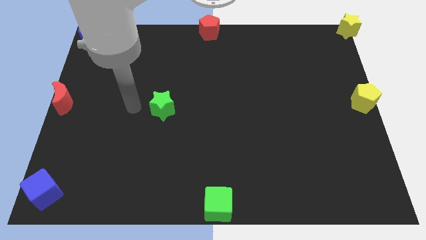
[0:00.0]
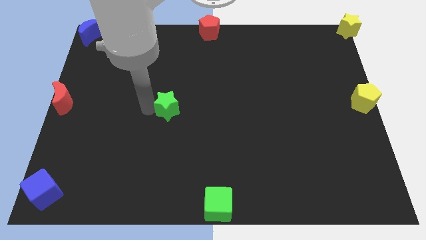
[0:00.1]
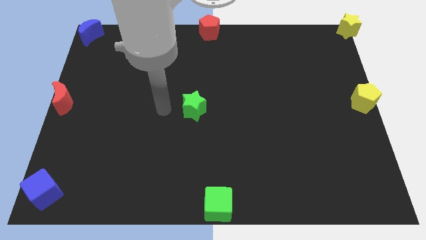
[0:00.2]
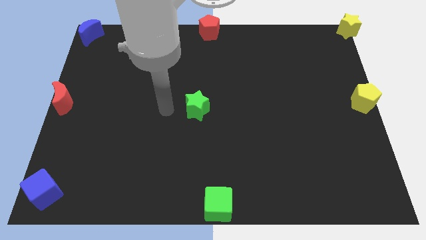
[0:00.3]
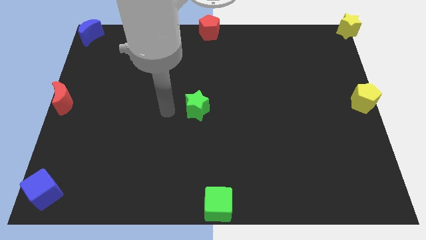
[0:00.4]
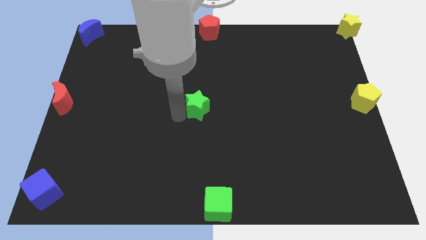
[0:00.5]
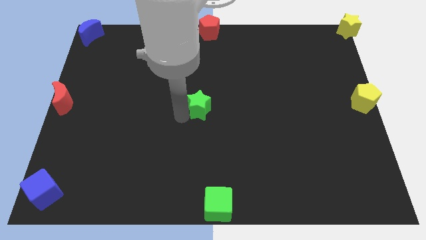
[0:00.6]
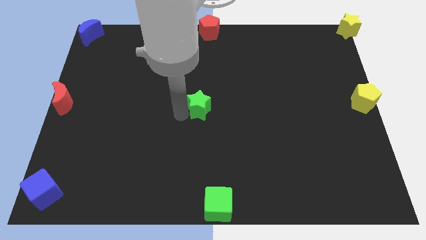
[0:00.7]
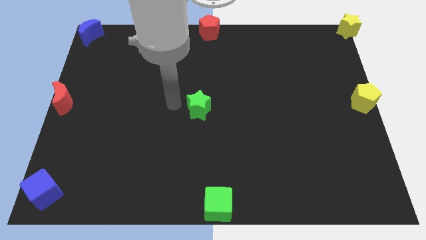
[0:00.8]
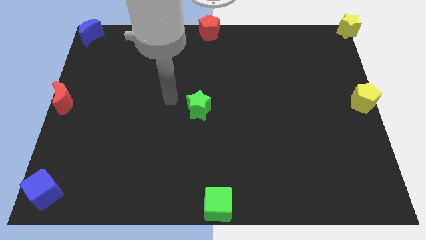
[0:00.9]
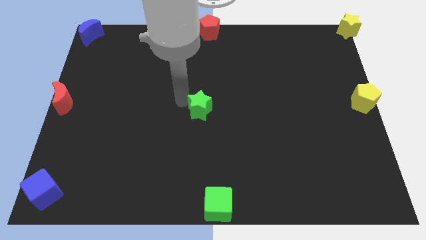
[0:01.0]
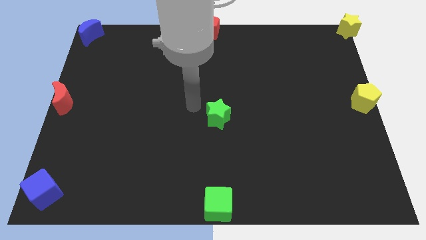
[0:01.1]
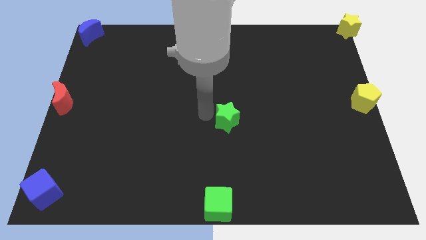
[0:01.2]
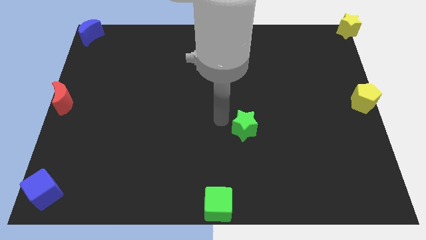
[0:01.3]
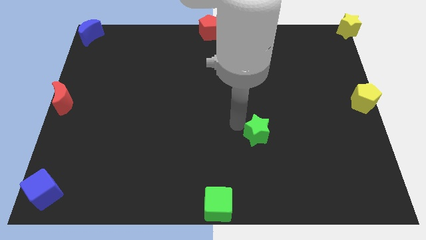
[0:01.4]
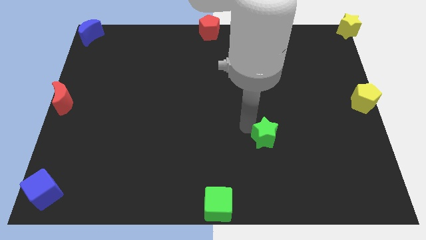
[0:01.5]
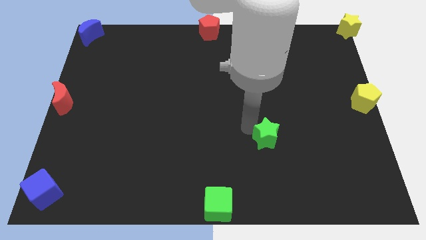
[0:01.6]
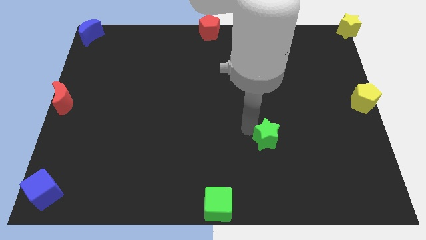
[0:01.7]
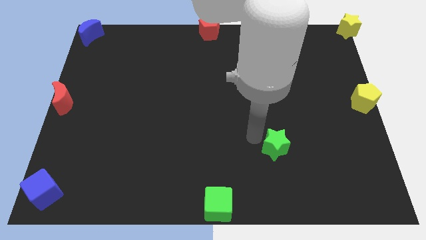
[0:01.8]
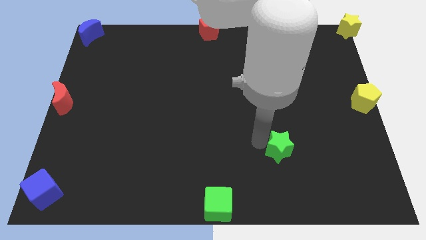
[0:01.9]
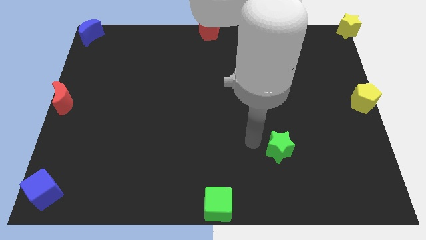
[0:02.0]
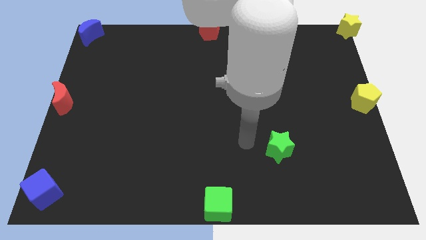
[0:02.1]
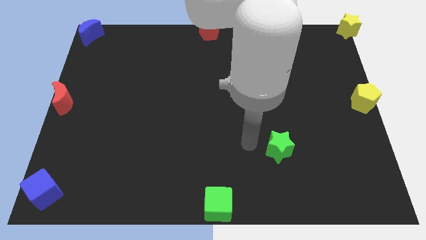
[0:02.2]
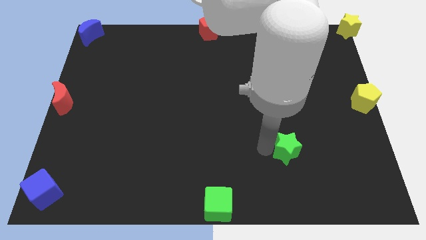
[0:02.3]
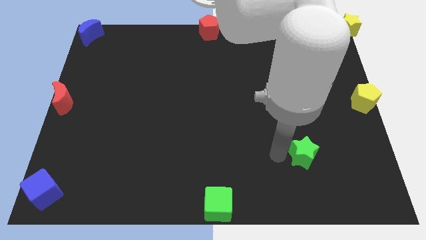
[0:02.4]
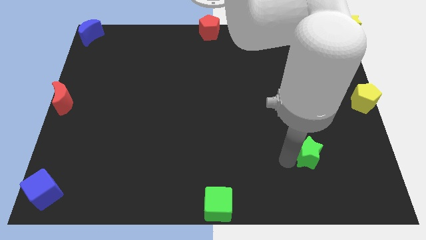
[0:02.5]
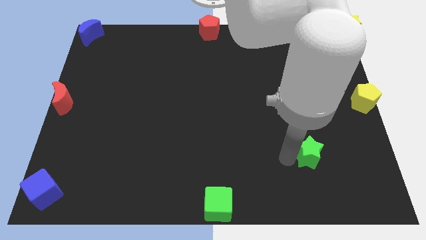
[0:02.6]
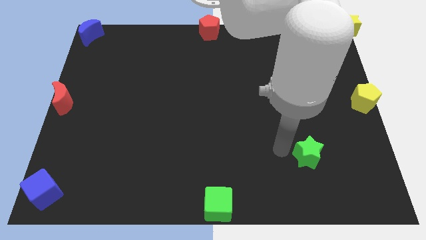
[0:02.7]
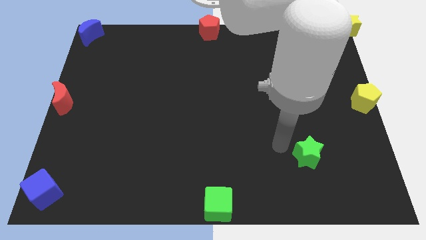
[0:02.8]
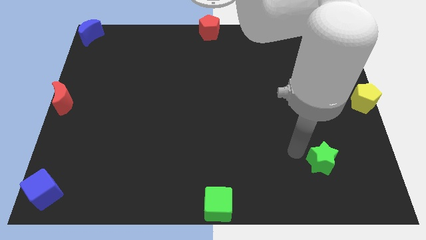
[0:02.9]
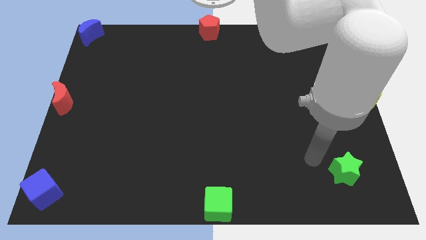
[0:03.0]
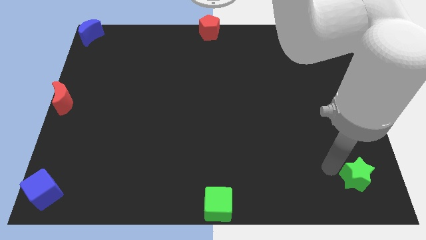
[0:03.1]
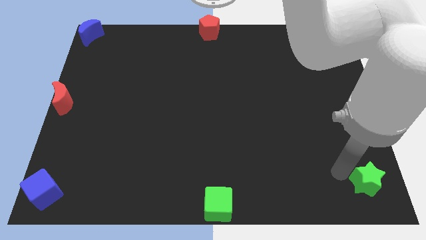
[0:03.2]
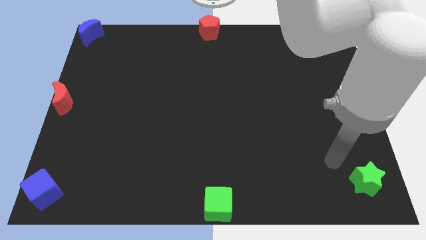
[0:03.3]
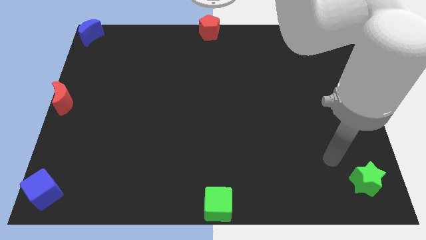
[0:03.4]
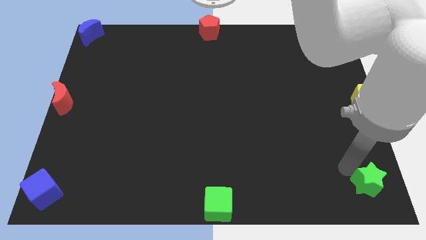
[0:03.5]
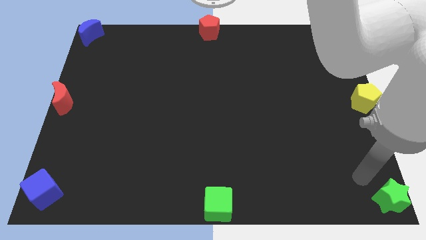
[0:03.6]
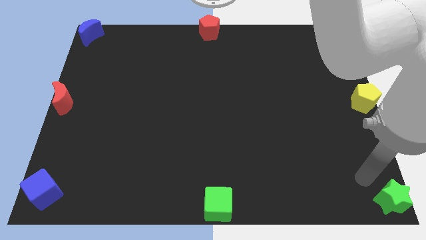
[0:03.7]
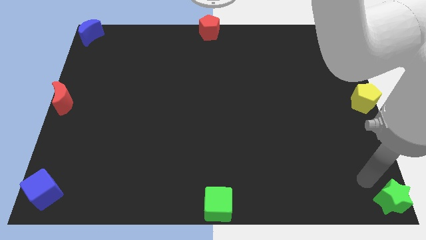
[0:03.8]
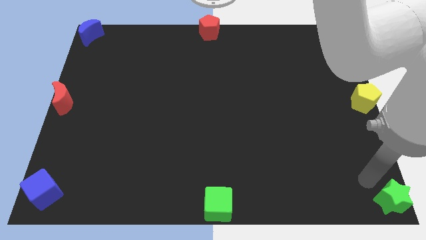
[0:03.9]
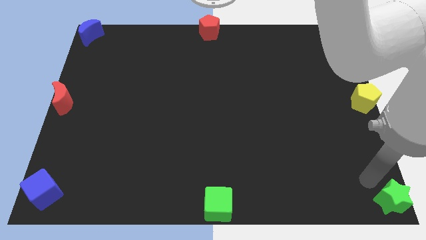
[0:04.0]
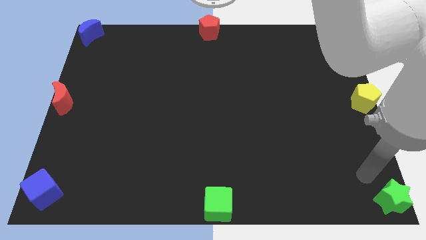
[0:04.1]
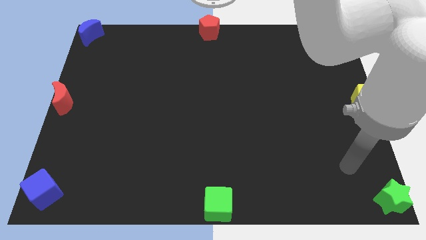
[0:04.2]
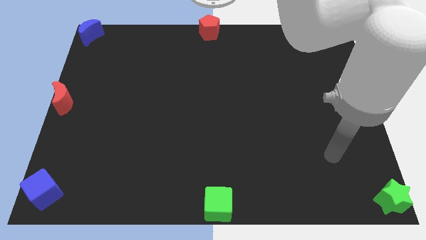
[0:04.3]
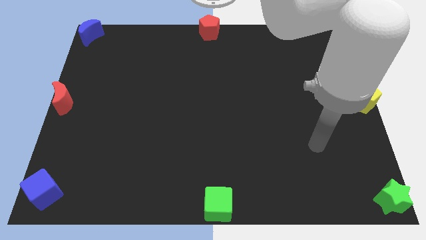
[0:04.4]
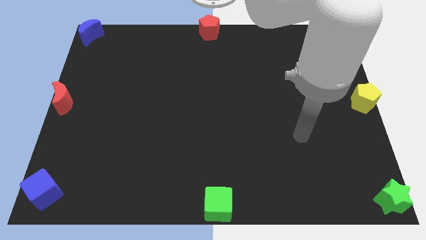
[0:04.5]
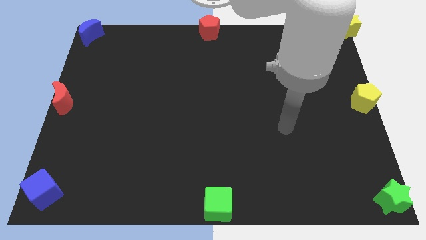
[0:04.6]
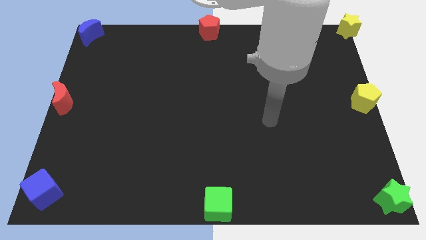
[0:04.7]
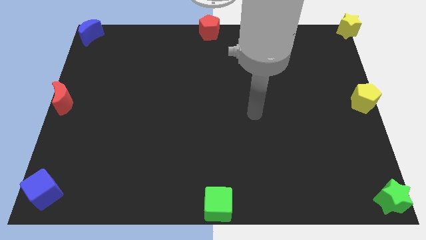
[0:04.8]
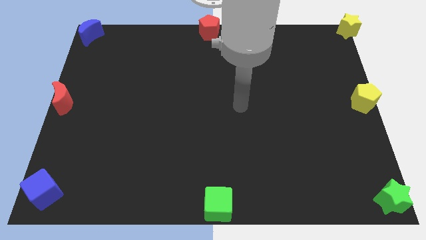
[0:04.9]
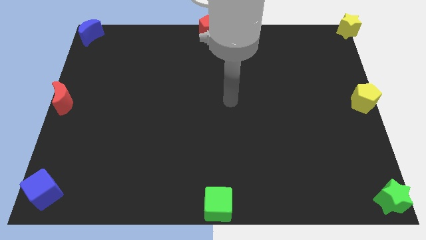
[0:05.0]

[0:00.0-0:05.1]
push the green star to the bottom left side of the board

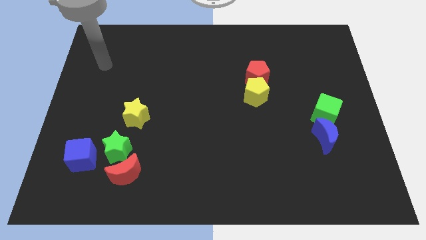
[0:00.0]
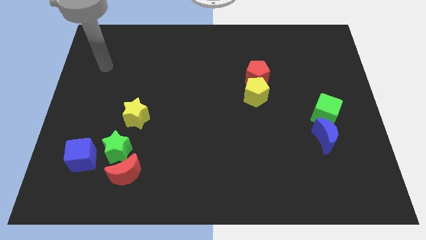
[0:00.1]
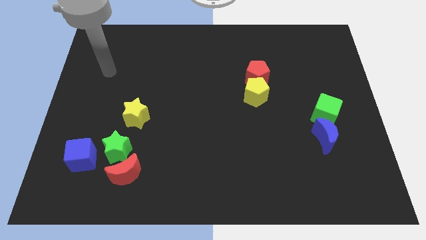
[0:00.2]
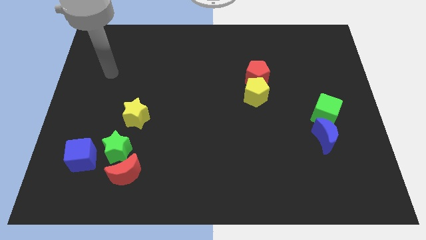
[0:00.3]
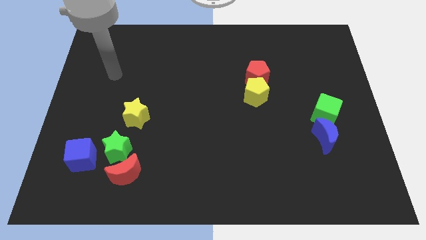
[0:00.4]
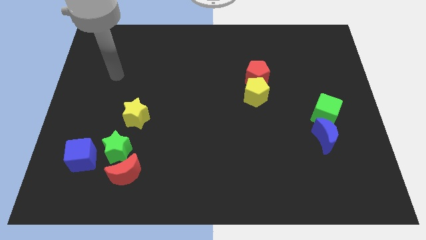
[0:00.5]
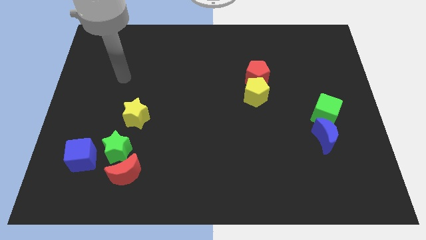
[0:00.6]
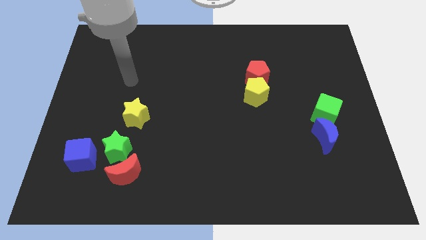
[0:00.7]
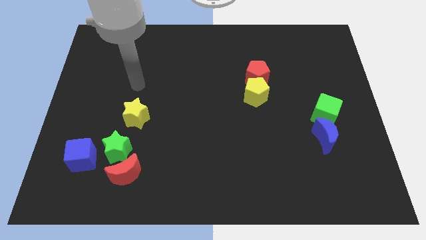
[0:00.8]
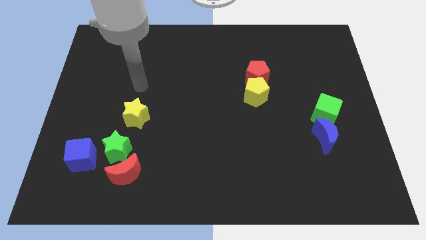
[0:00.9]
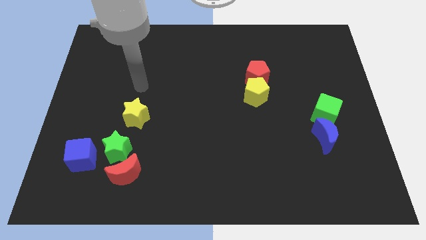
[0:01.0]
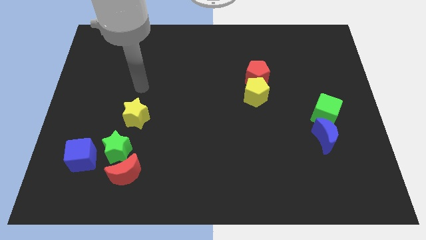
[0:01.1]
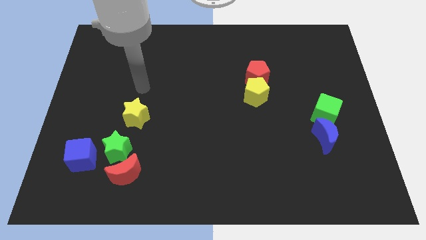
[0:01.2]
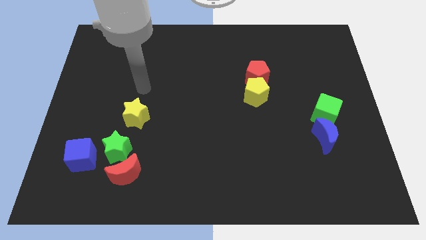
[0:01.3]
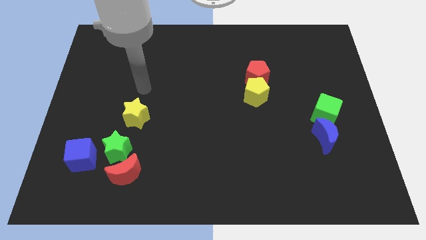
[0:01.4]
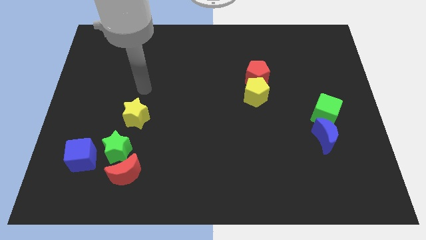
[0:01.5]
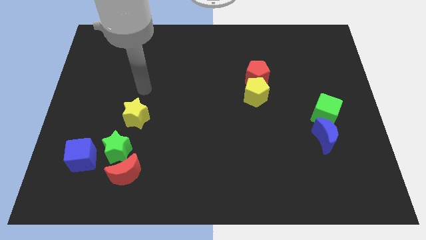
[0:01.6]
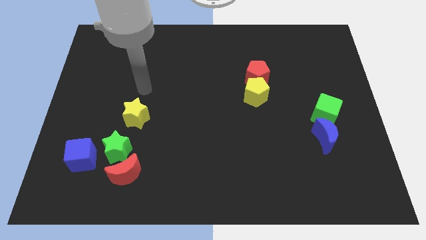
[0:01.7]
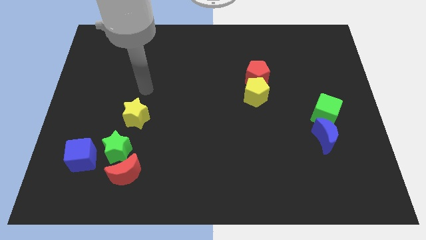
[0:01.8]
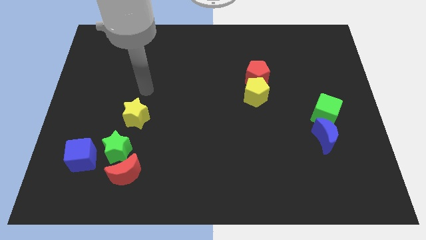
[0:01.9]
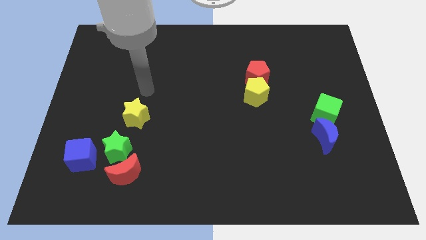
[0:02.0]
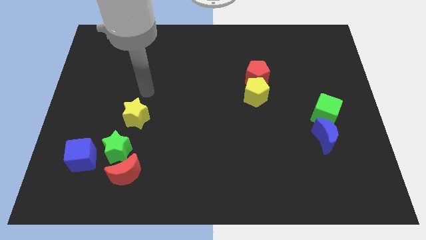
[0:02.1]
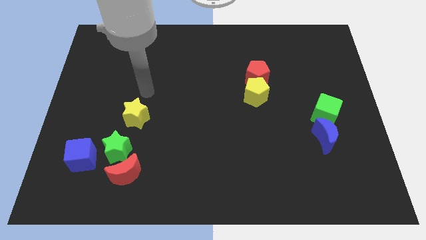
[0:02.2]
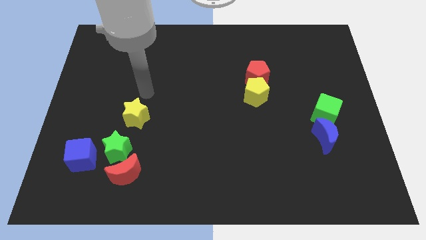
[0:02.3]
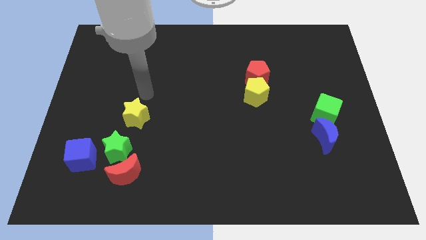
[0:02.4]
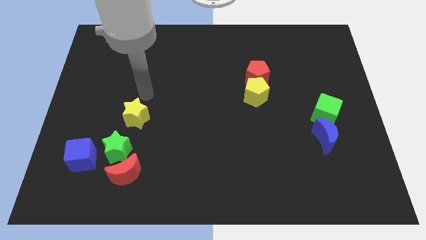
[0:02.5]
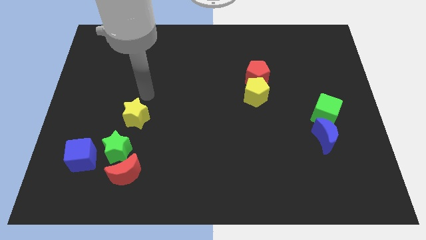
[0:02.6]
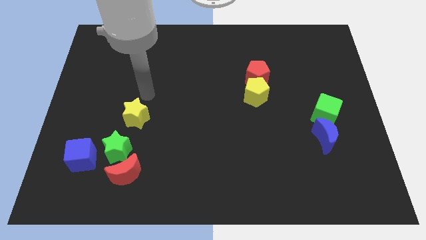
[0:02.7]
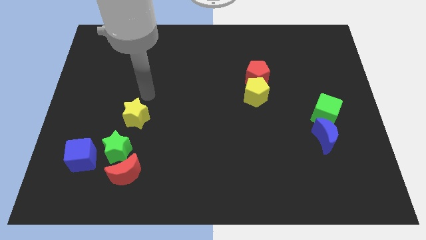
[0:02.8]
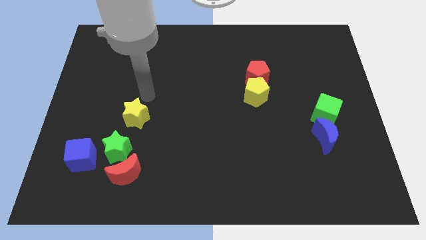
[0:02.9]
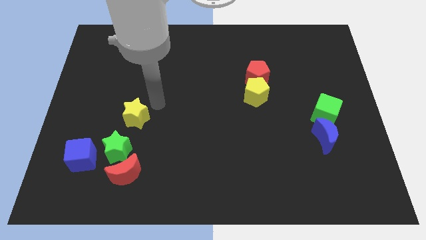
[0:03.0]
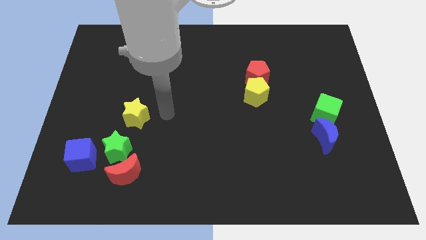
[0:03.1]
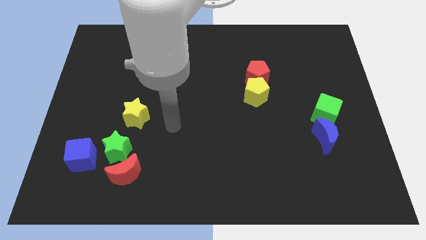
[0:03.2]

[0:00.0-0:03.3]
move your arm to the right of the yellow star

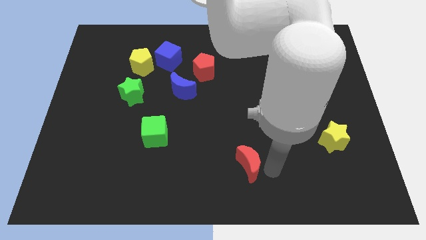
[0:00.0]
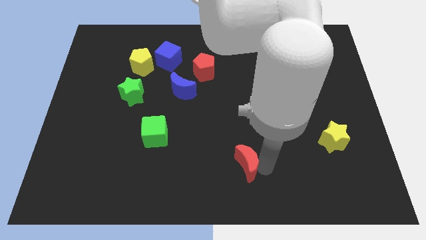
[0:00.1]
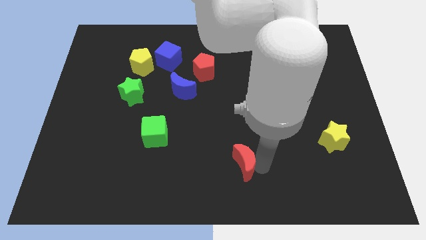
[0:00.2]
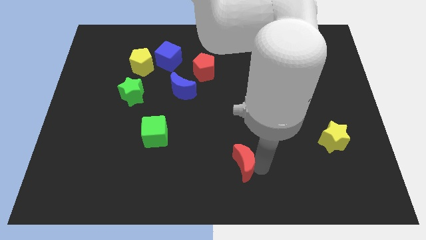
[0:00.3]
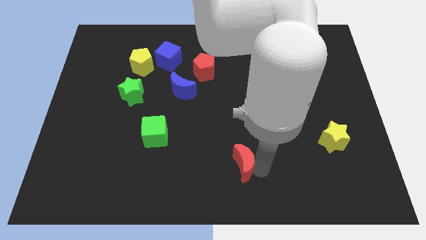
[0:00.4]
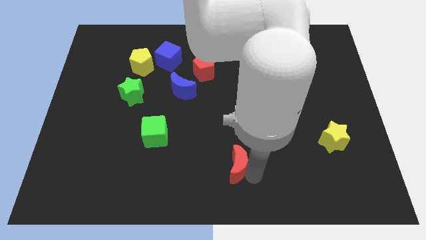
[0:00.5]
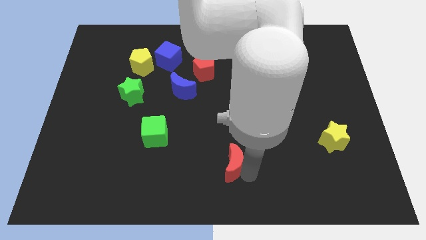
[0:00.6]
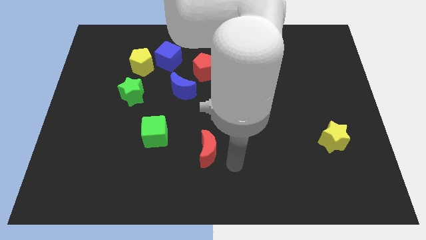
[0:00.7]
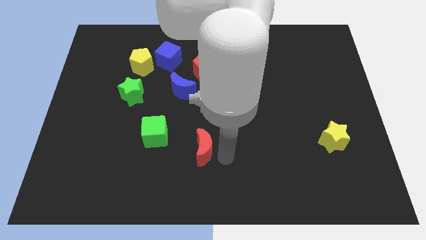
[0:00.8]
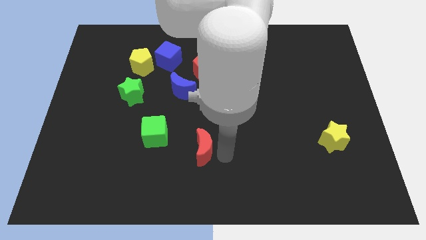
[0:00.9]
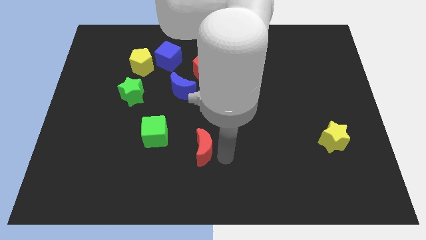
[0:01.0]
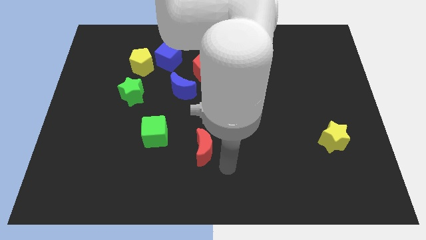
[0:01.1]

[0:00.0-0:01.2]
push red crescent towards the green cube
